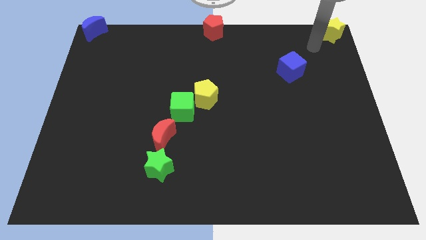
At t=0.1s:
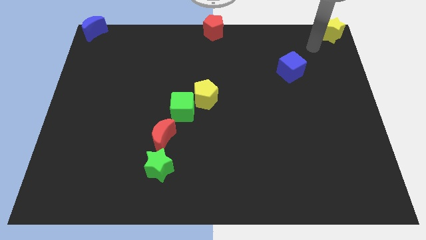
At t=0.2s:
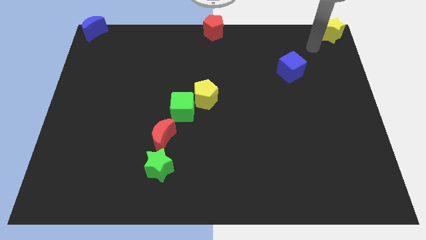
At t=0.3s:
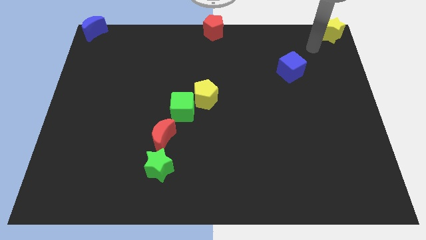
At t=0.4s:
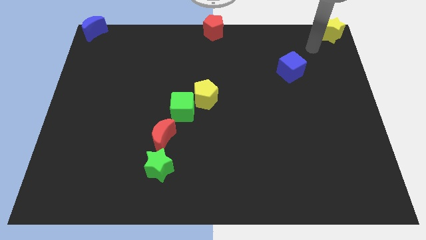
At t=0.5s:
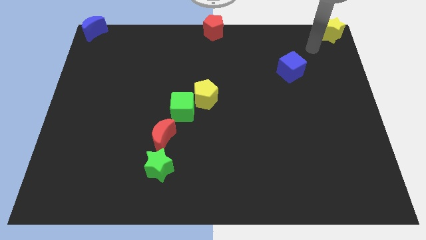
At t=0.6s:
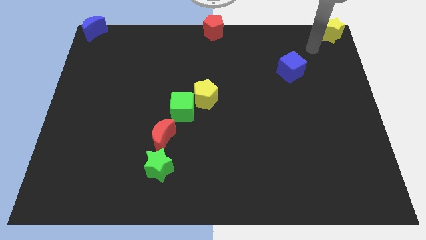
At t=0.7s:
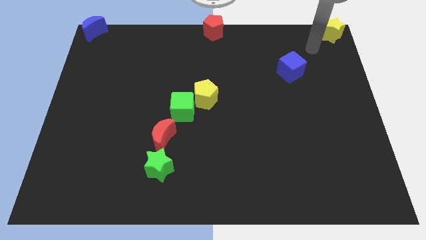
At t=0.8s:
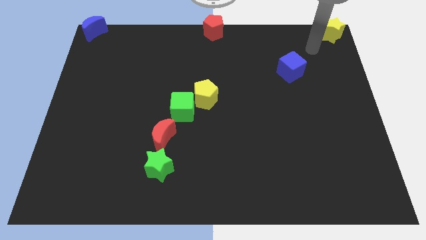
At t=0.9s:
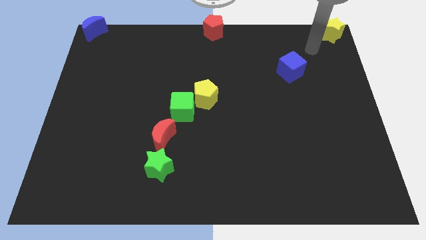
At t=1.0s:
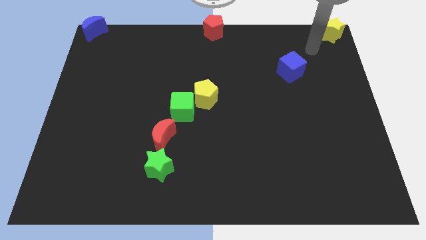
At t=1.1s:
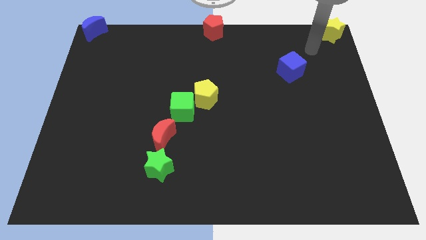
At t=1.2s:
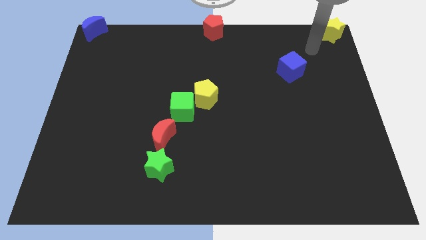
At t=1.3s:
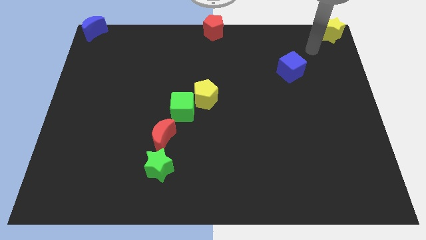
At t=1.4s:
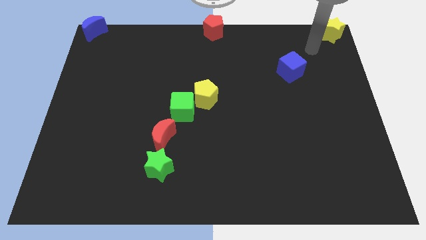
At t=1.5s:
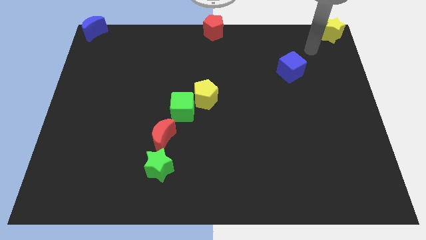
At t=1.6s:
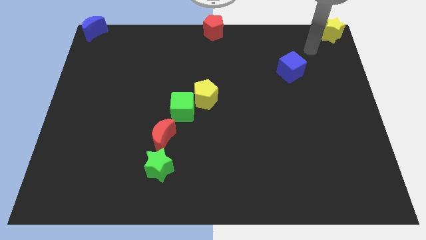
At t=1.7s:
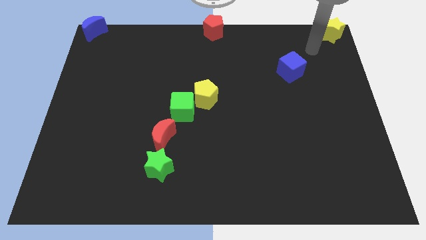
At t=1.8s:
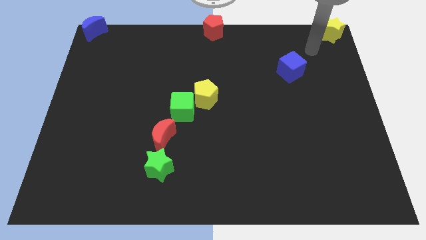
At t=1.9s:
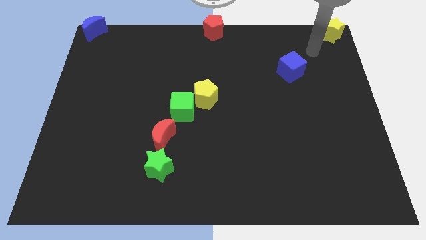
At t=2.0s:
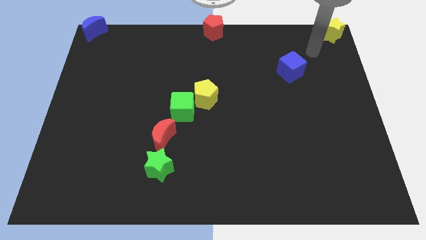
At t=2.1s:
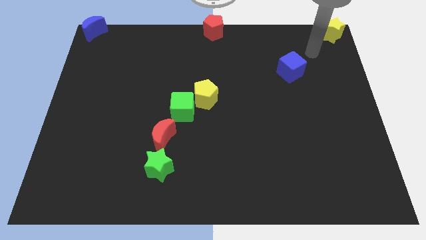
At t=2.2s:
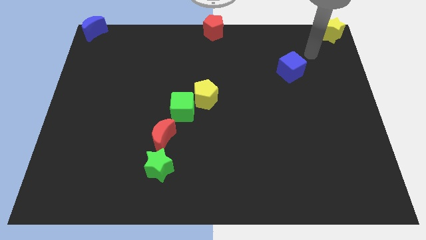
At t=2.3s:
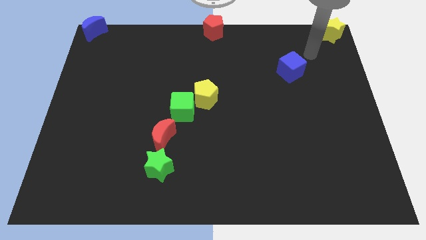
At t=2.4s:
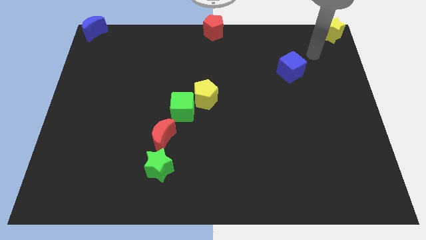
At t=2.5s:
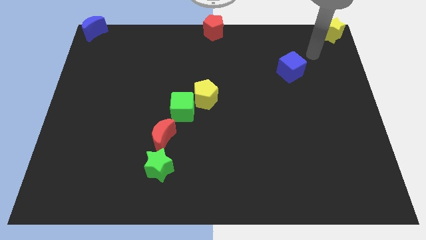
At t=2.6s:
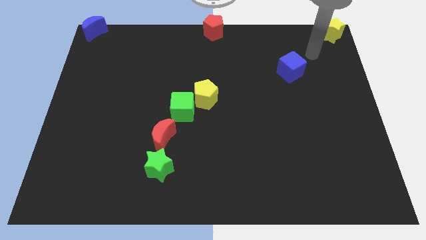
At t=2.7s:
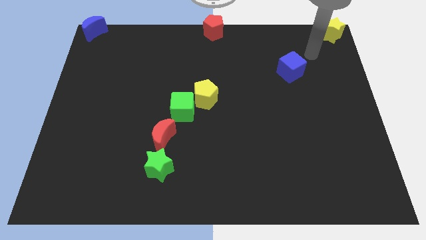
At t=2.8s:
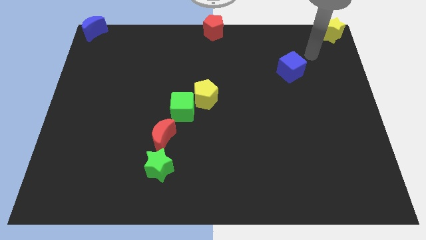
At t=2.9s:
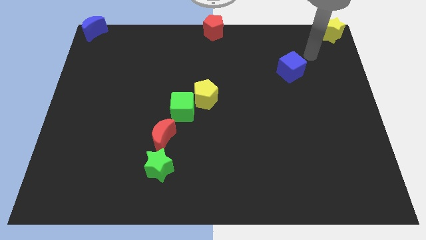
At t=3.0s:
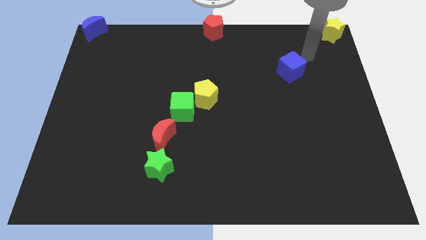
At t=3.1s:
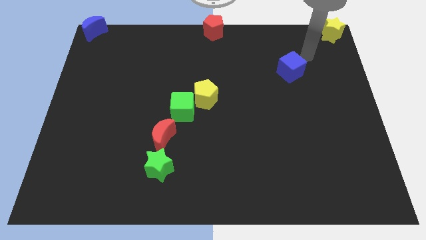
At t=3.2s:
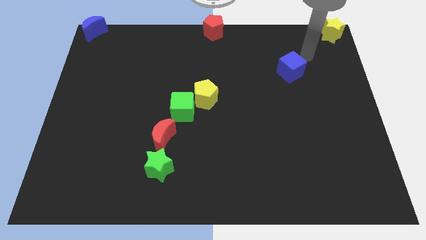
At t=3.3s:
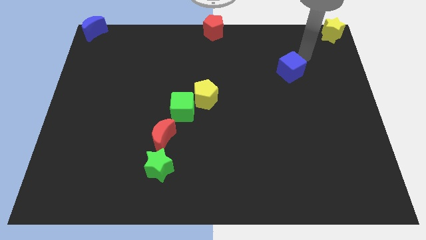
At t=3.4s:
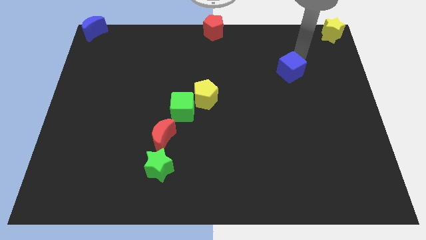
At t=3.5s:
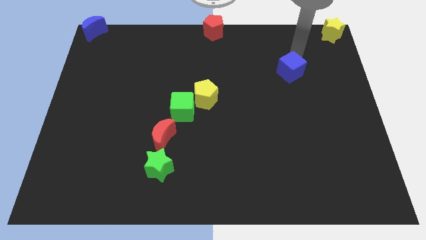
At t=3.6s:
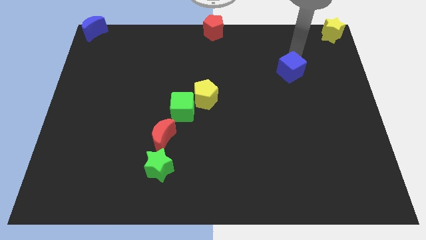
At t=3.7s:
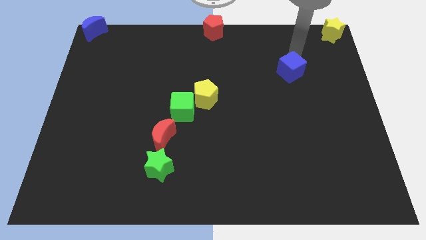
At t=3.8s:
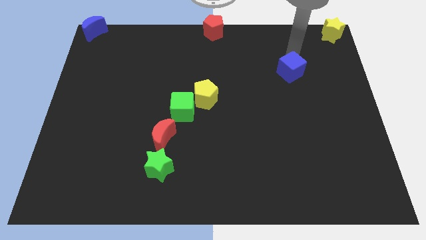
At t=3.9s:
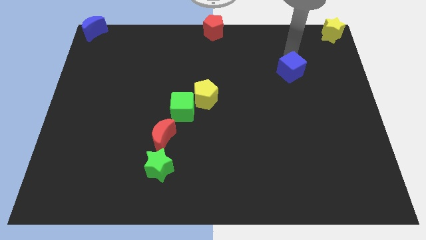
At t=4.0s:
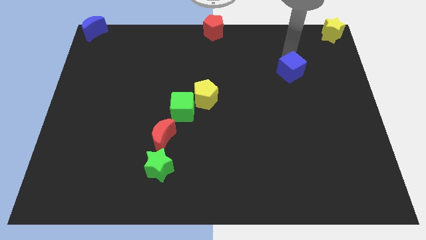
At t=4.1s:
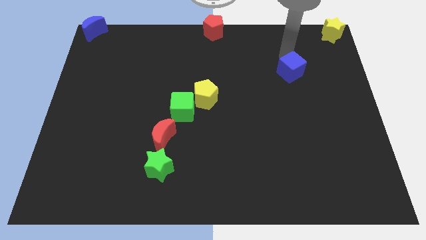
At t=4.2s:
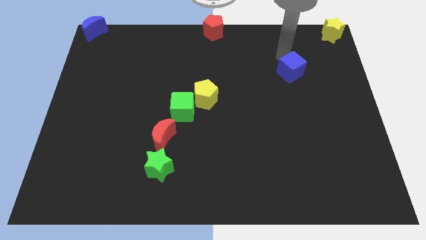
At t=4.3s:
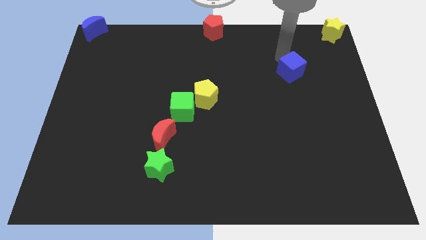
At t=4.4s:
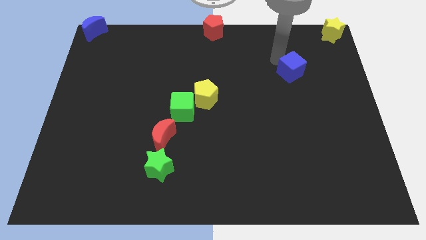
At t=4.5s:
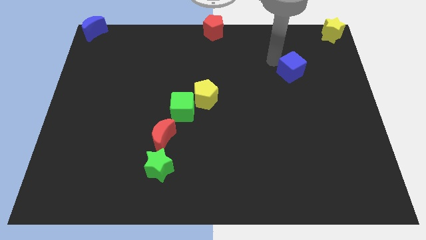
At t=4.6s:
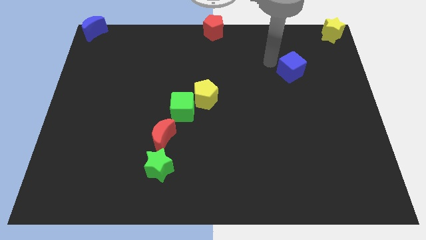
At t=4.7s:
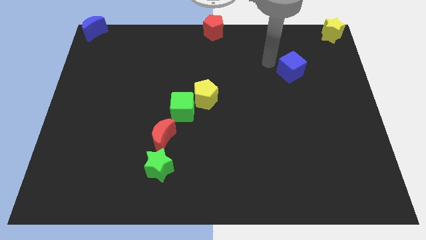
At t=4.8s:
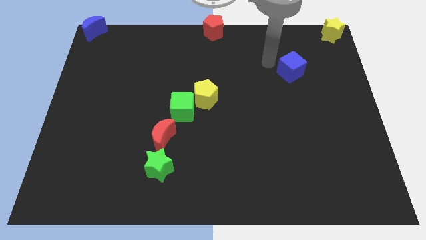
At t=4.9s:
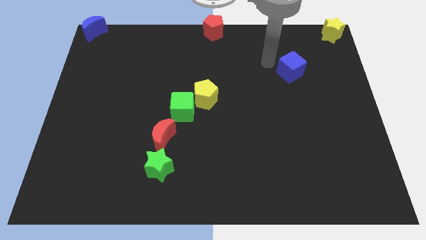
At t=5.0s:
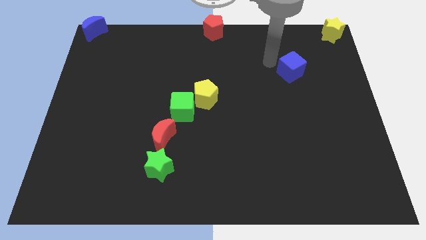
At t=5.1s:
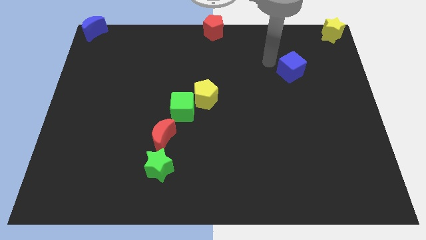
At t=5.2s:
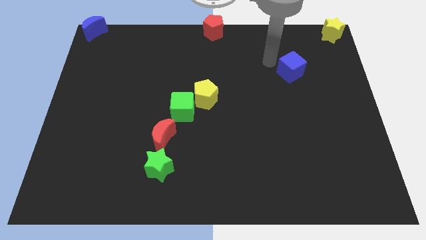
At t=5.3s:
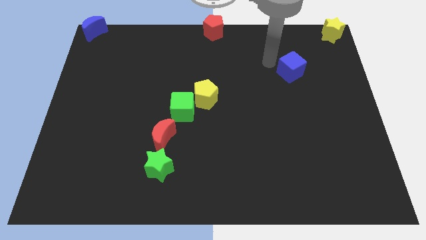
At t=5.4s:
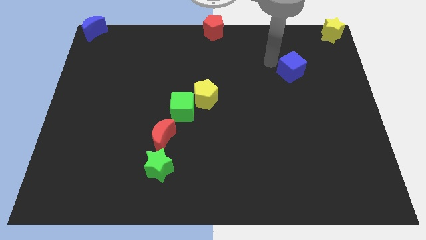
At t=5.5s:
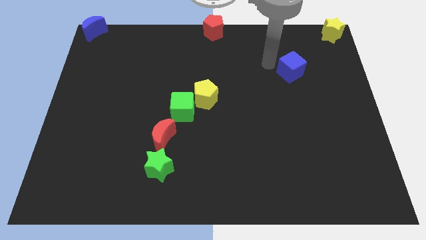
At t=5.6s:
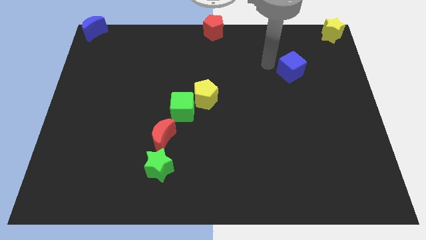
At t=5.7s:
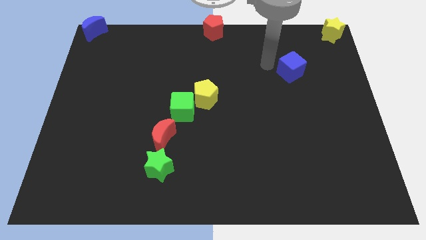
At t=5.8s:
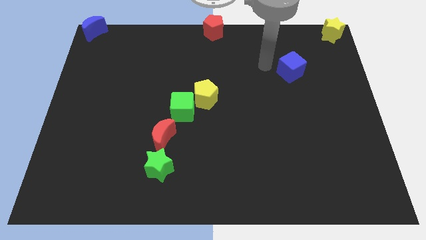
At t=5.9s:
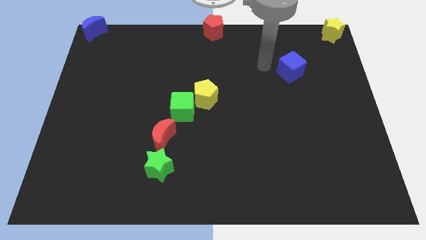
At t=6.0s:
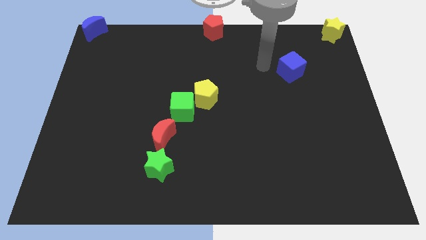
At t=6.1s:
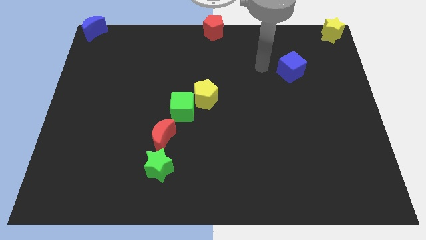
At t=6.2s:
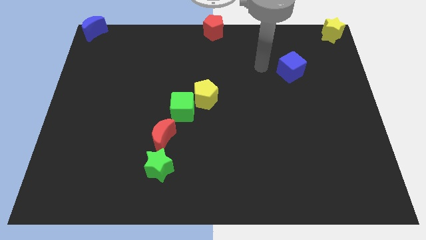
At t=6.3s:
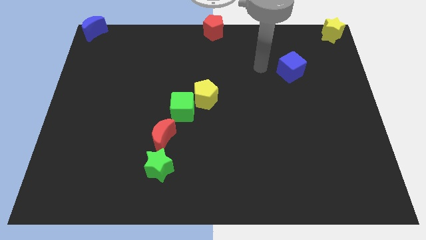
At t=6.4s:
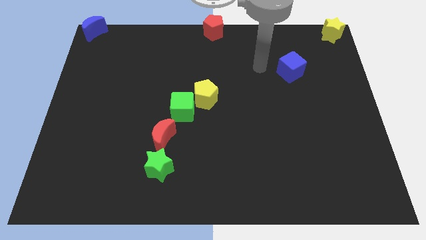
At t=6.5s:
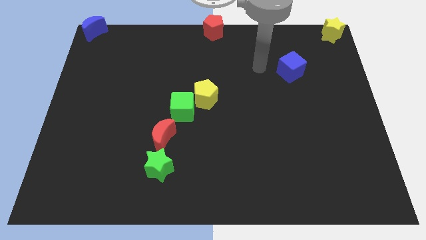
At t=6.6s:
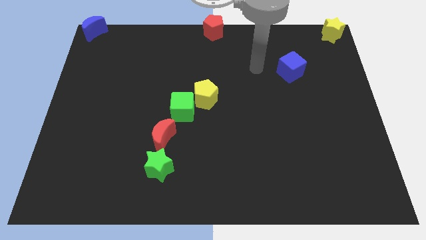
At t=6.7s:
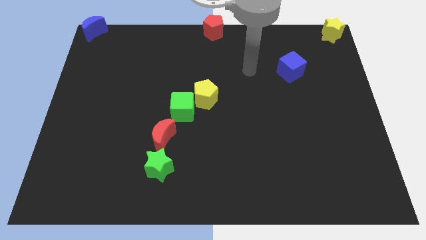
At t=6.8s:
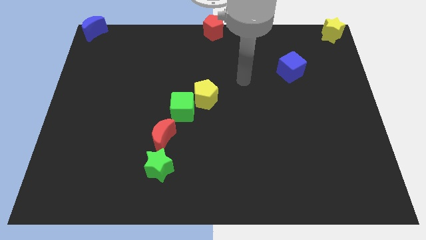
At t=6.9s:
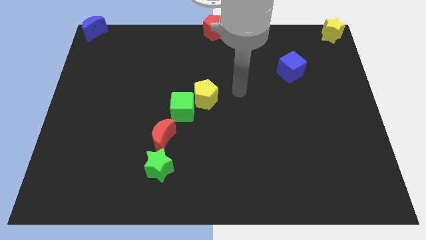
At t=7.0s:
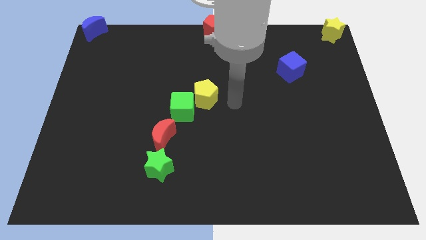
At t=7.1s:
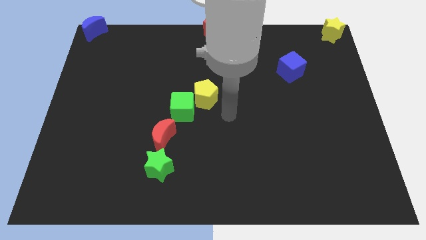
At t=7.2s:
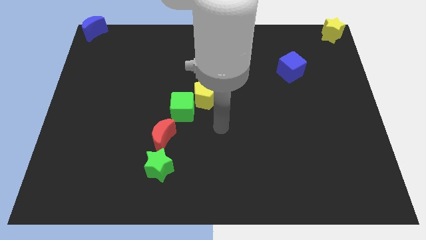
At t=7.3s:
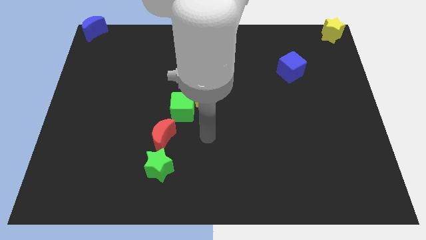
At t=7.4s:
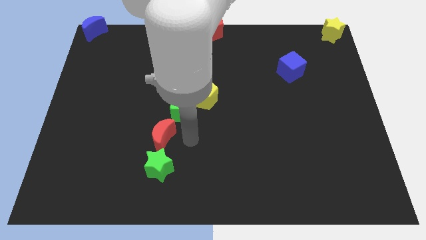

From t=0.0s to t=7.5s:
move your arm right to the red crescent

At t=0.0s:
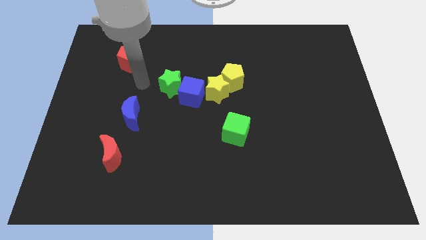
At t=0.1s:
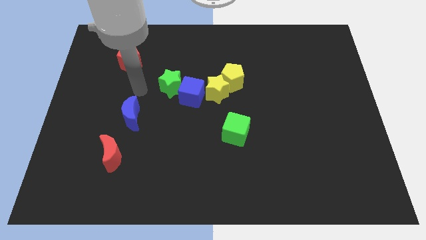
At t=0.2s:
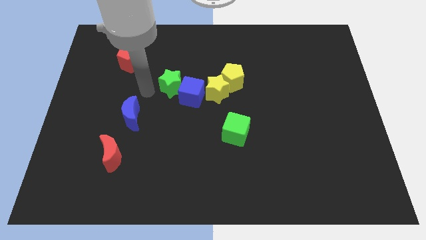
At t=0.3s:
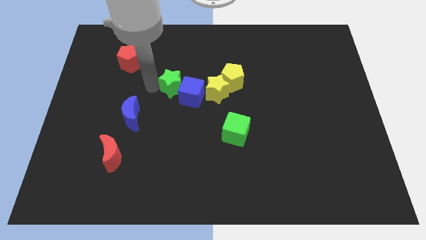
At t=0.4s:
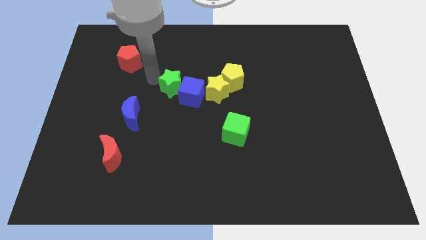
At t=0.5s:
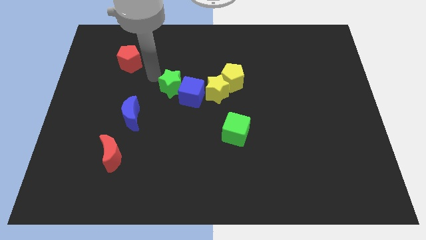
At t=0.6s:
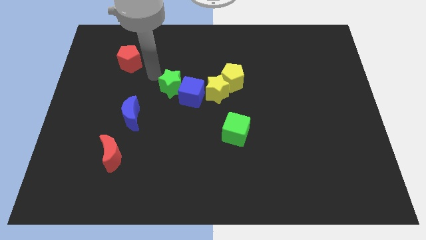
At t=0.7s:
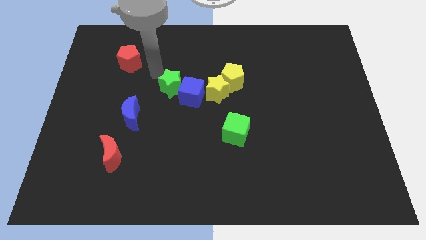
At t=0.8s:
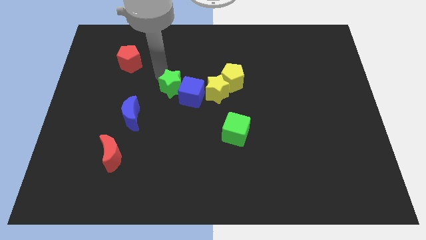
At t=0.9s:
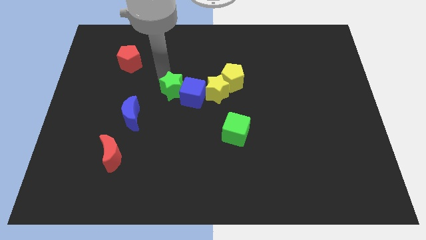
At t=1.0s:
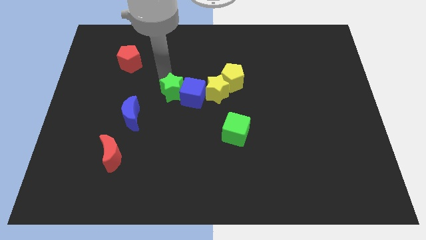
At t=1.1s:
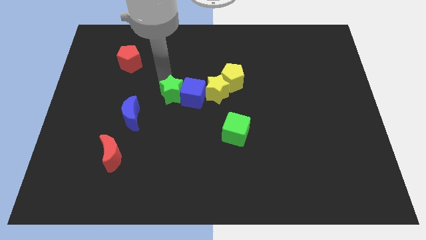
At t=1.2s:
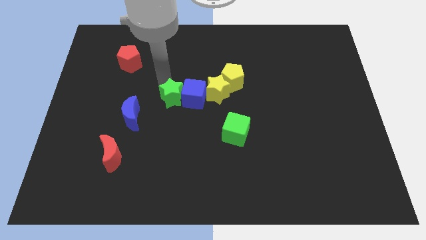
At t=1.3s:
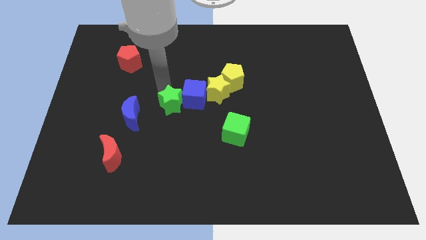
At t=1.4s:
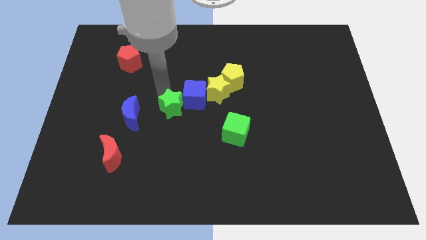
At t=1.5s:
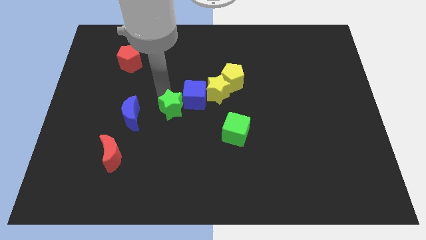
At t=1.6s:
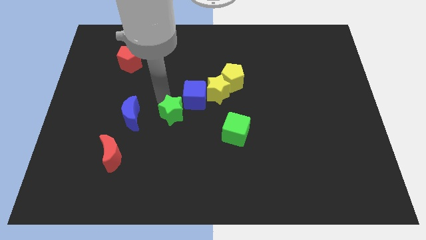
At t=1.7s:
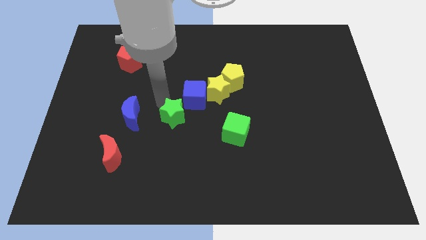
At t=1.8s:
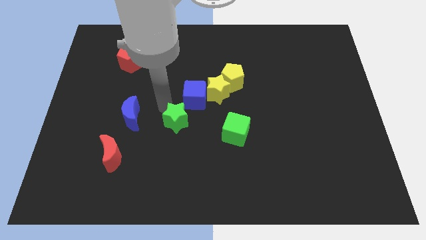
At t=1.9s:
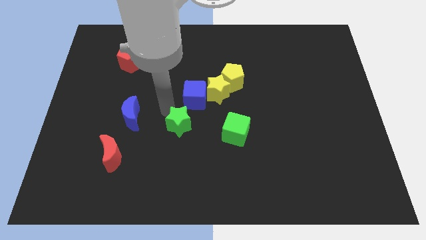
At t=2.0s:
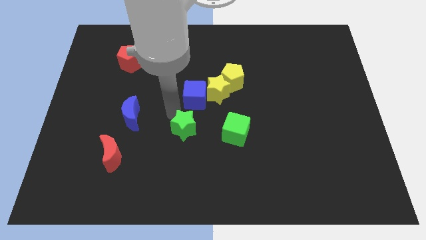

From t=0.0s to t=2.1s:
separate green star and blue cube
